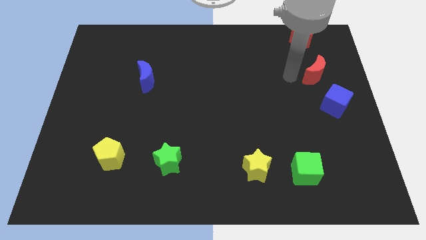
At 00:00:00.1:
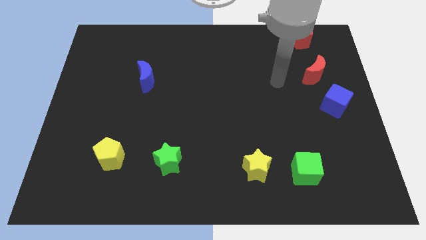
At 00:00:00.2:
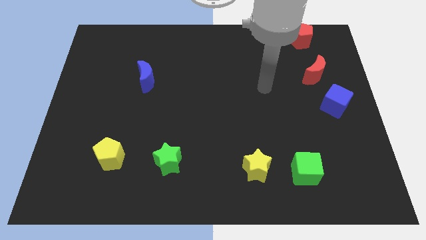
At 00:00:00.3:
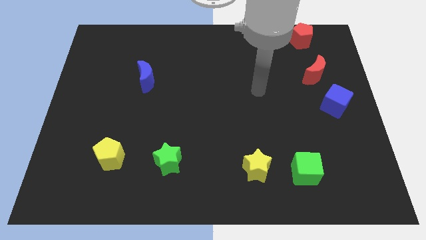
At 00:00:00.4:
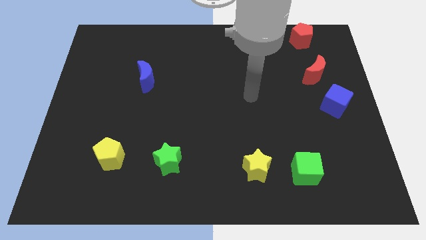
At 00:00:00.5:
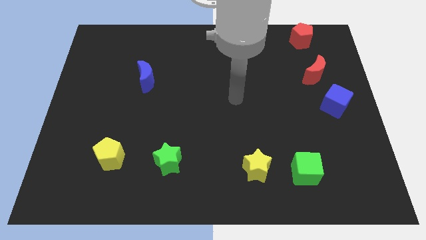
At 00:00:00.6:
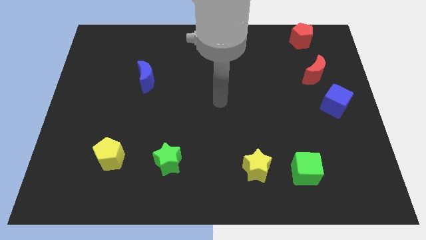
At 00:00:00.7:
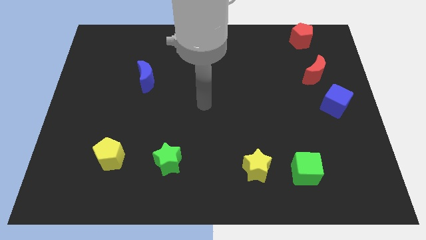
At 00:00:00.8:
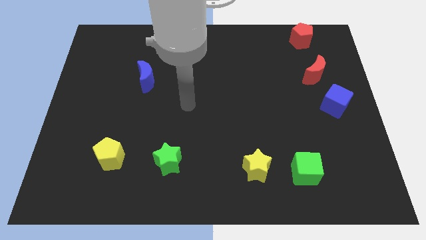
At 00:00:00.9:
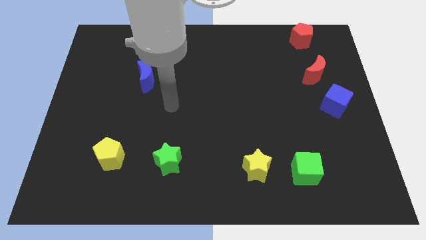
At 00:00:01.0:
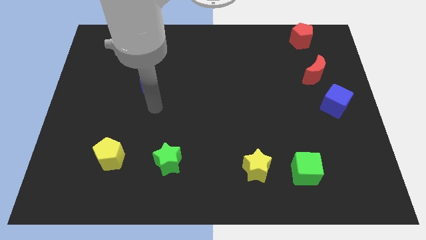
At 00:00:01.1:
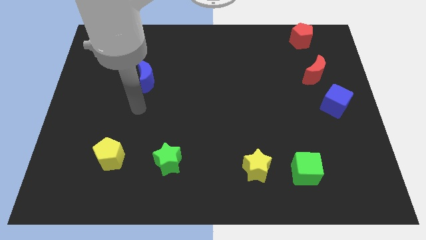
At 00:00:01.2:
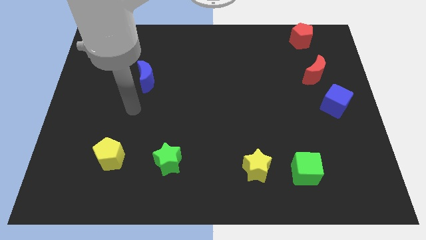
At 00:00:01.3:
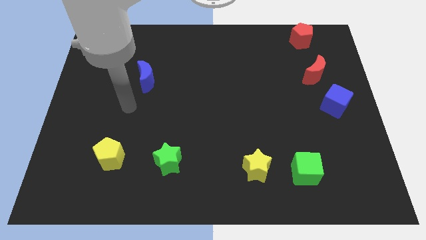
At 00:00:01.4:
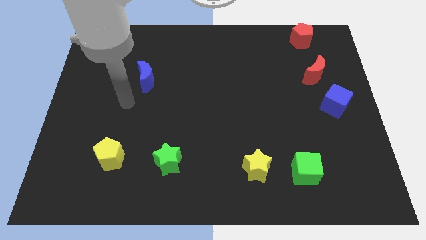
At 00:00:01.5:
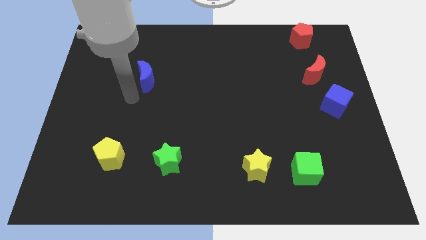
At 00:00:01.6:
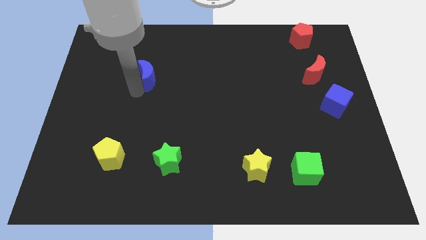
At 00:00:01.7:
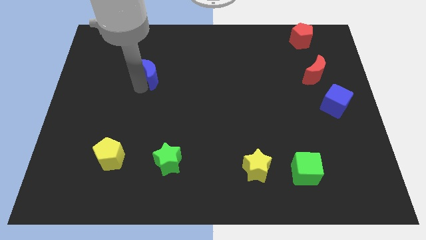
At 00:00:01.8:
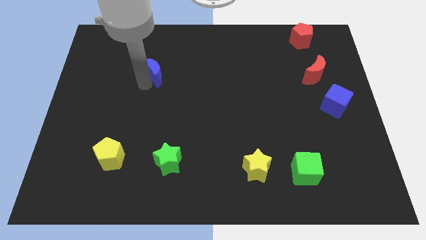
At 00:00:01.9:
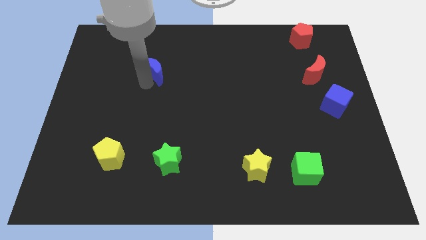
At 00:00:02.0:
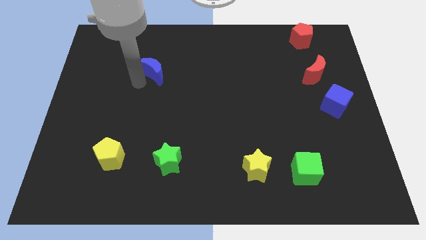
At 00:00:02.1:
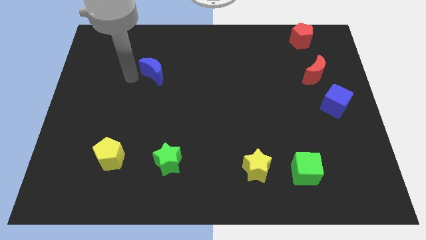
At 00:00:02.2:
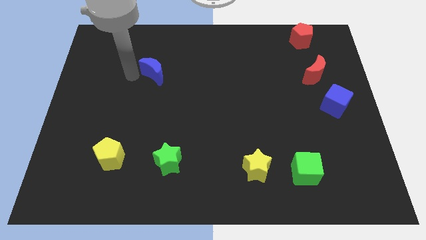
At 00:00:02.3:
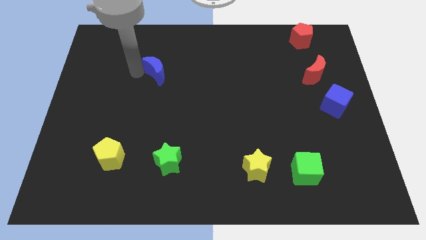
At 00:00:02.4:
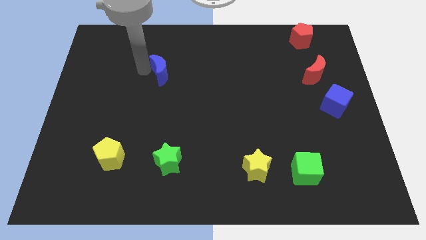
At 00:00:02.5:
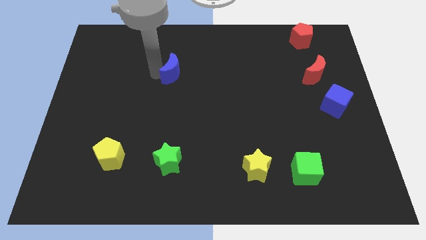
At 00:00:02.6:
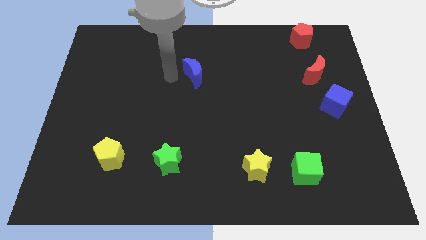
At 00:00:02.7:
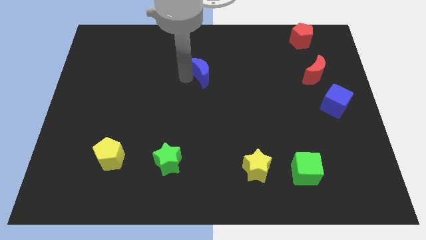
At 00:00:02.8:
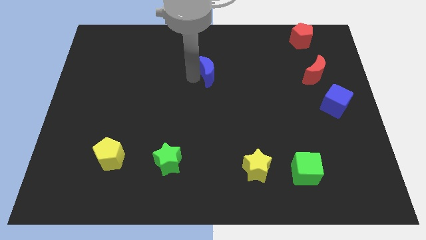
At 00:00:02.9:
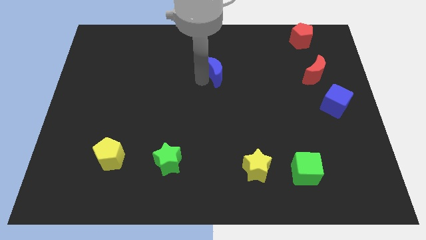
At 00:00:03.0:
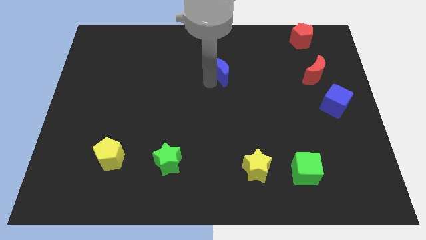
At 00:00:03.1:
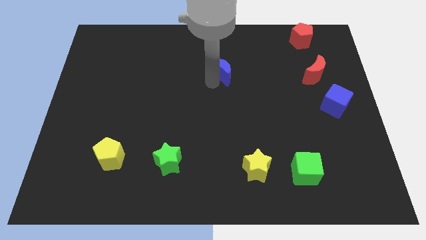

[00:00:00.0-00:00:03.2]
move the blue crescent at the center of the board

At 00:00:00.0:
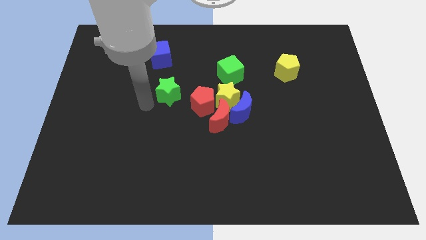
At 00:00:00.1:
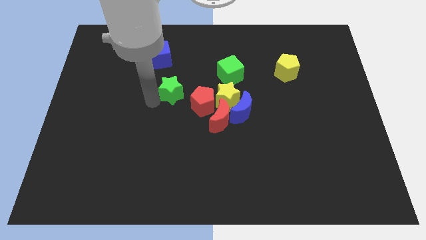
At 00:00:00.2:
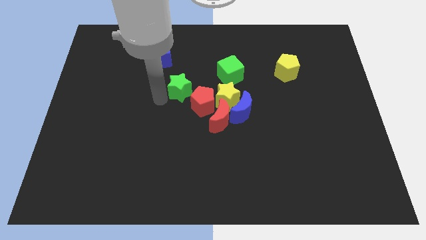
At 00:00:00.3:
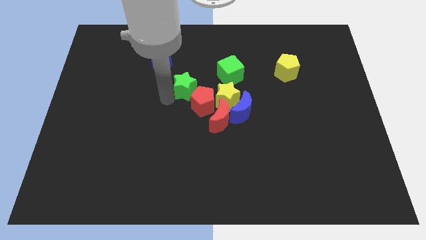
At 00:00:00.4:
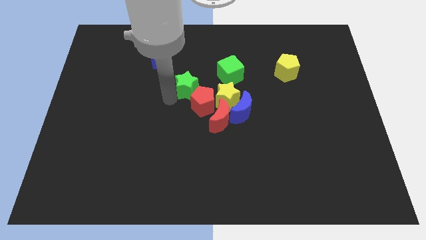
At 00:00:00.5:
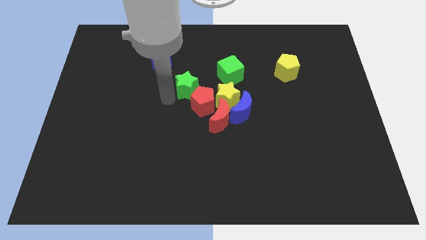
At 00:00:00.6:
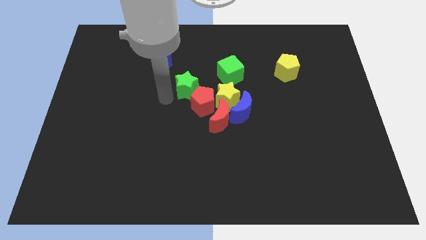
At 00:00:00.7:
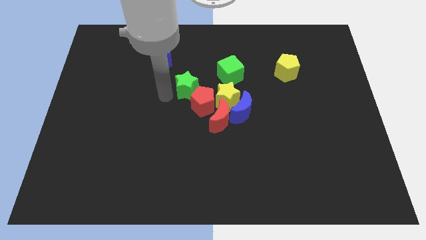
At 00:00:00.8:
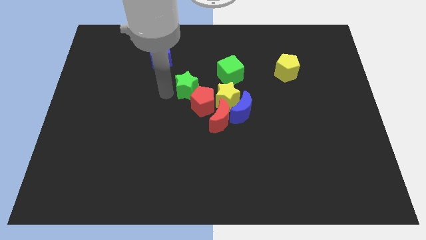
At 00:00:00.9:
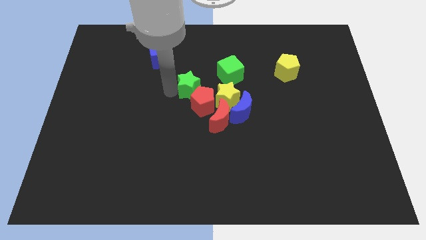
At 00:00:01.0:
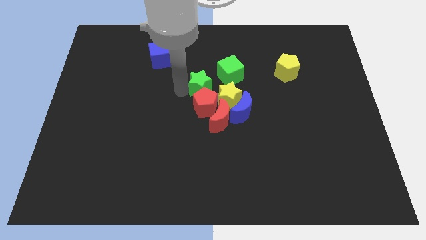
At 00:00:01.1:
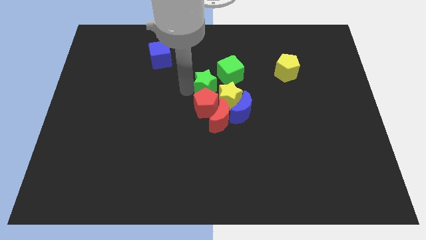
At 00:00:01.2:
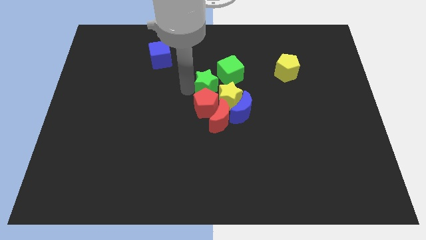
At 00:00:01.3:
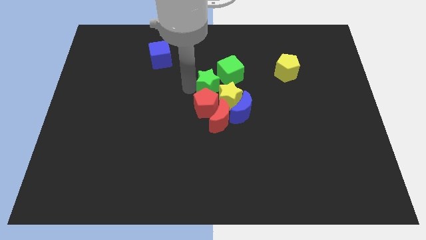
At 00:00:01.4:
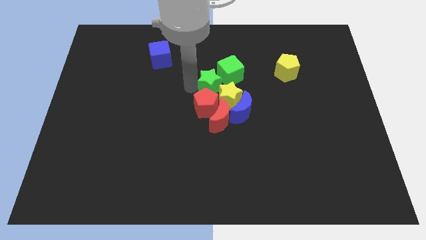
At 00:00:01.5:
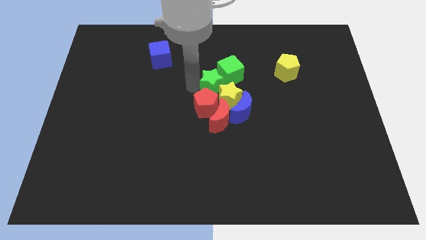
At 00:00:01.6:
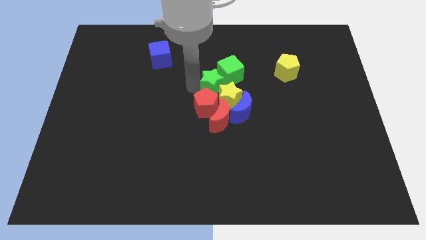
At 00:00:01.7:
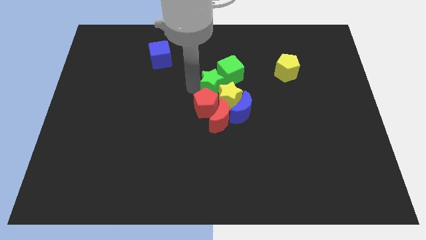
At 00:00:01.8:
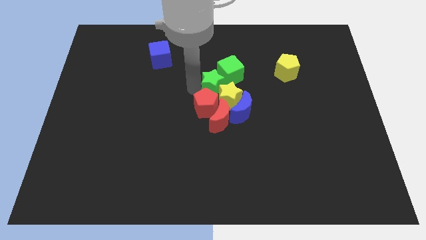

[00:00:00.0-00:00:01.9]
push green star to the left of green cube

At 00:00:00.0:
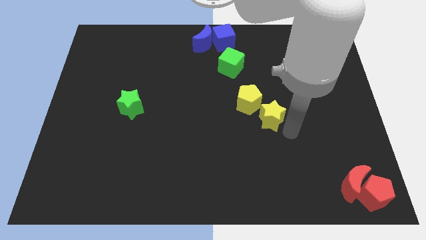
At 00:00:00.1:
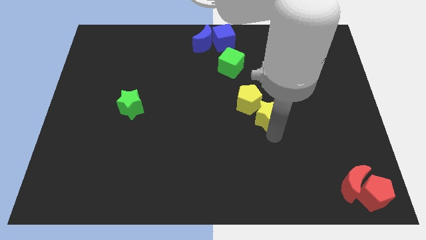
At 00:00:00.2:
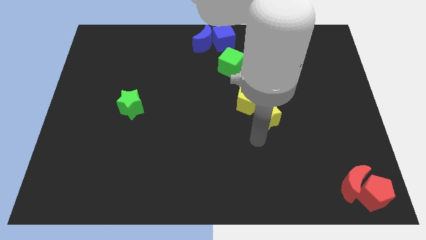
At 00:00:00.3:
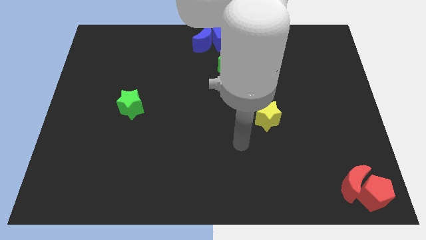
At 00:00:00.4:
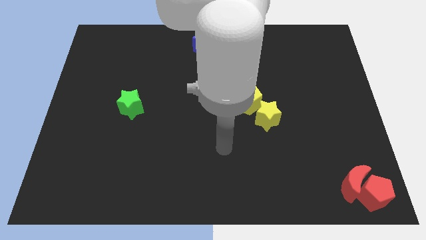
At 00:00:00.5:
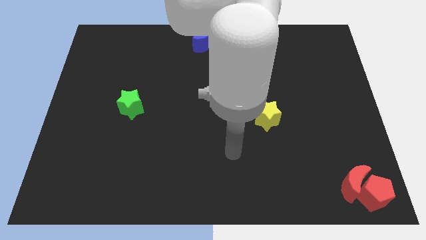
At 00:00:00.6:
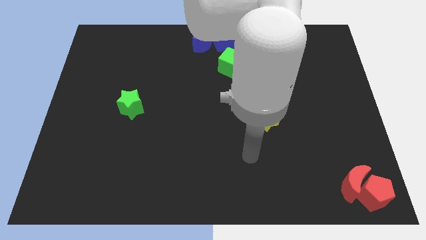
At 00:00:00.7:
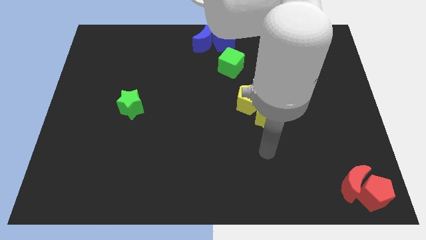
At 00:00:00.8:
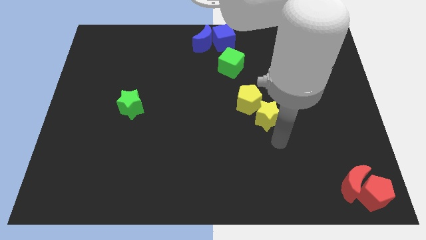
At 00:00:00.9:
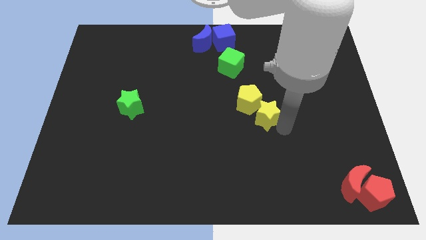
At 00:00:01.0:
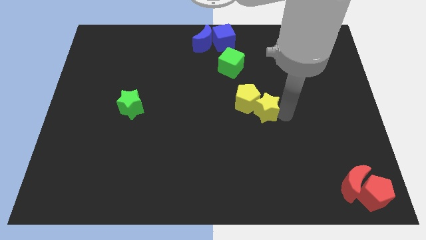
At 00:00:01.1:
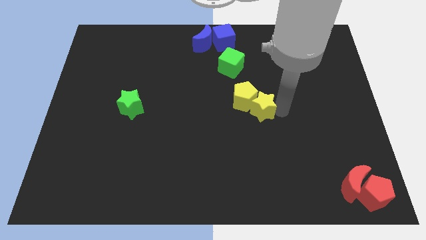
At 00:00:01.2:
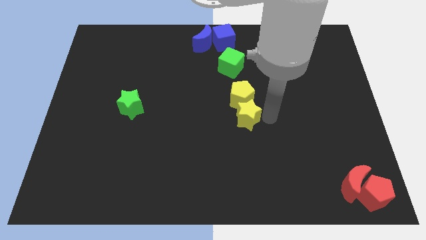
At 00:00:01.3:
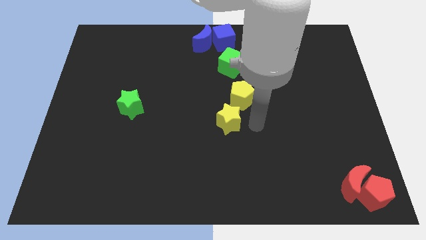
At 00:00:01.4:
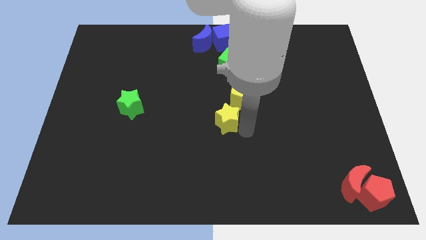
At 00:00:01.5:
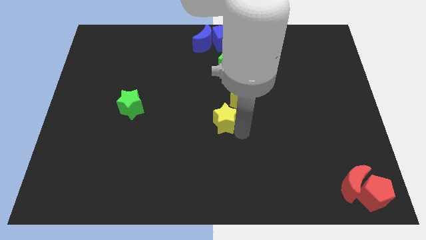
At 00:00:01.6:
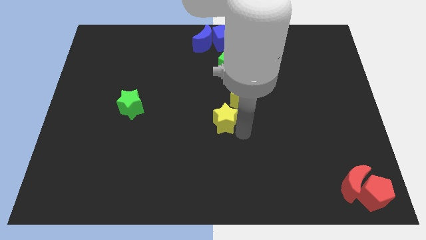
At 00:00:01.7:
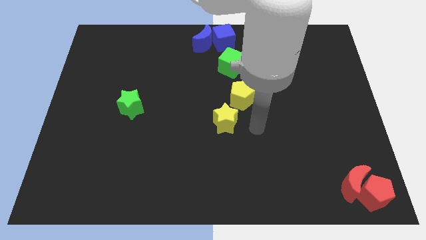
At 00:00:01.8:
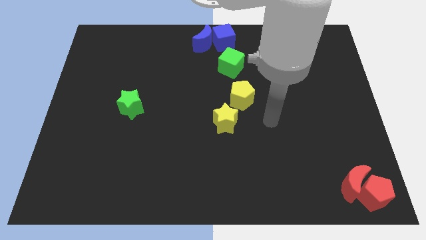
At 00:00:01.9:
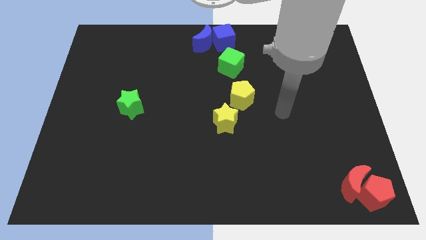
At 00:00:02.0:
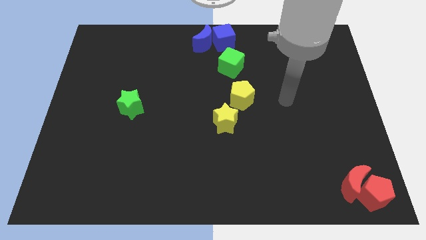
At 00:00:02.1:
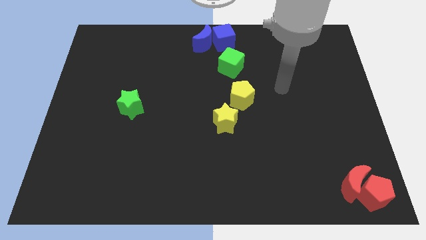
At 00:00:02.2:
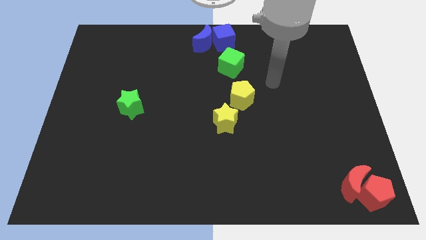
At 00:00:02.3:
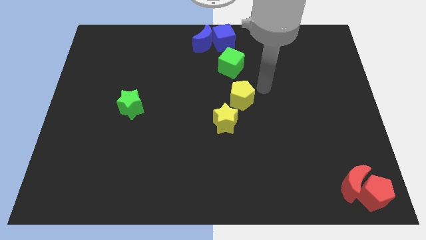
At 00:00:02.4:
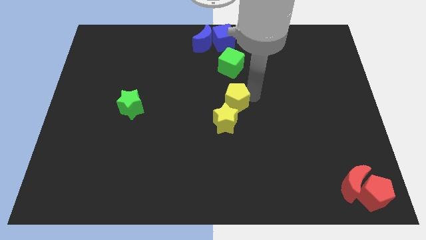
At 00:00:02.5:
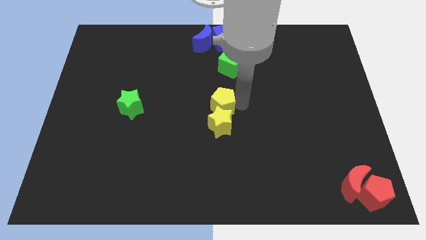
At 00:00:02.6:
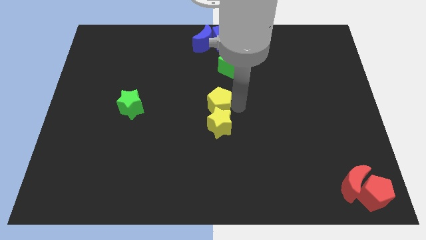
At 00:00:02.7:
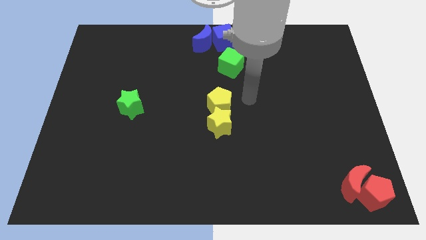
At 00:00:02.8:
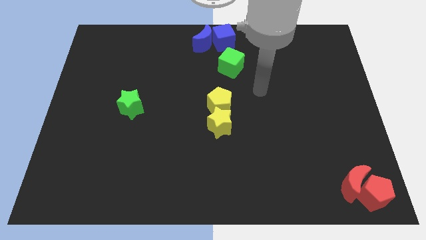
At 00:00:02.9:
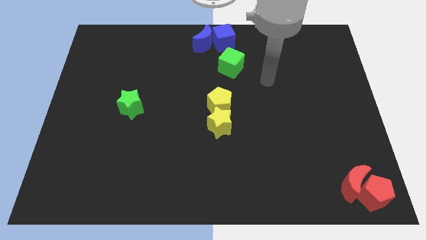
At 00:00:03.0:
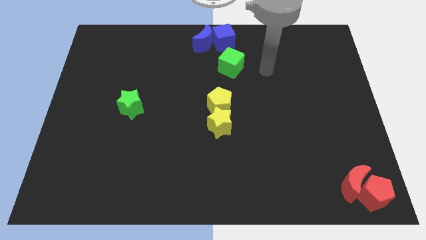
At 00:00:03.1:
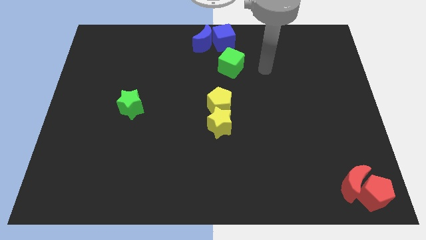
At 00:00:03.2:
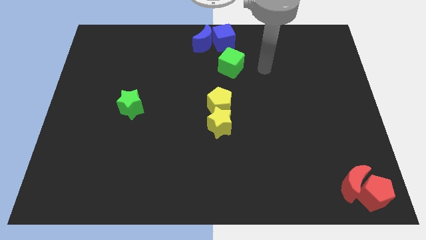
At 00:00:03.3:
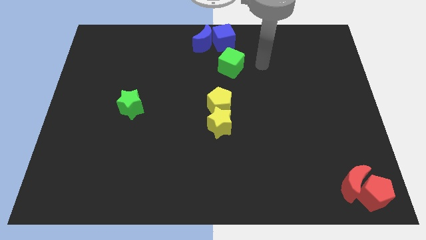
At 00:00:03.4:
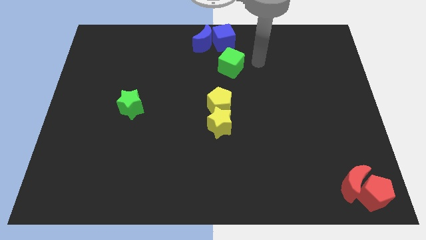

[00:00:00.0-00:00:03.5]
place both the yellow blocks at the center of the board

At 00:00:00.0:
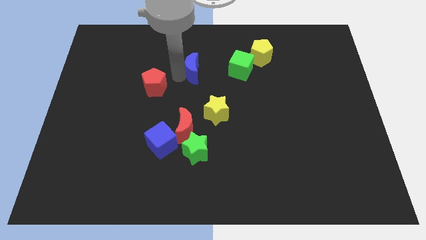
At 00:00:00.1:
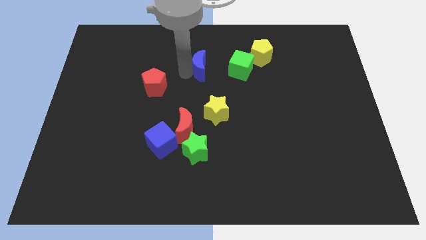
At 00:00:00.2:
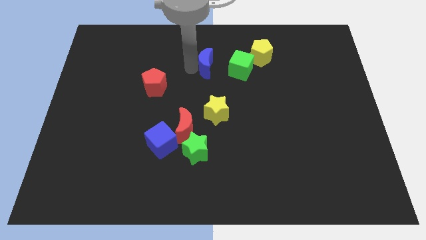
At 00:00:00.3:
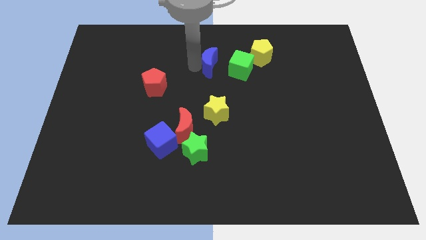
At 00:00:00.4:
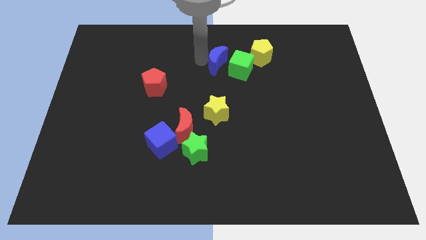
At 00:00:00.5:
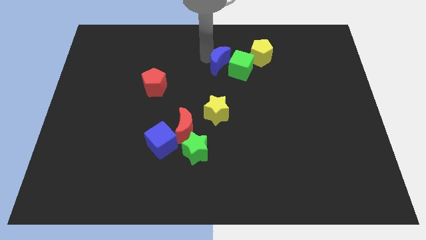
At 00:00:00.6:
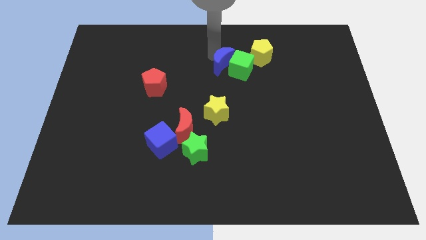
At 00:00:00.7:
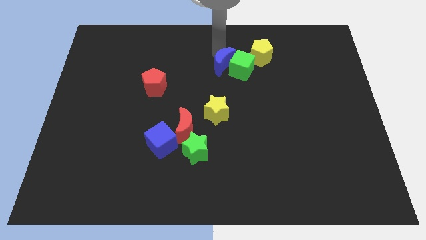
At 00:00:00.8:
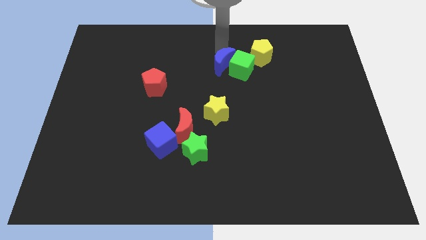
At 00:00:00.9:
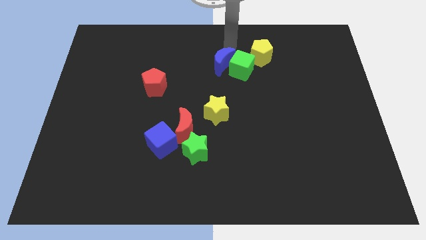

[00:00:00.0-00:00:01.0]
push the blue crescent into green cube
